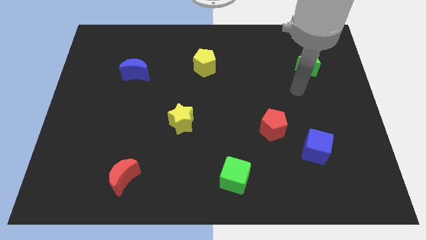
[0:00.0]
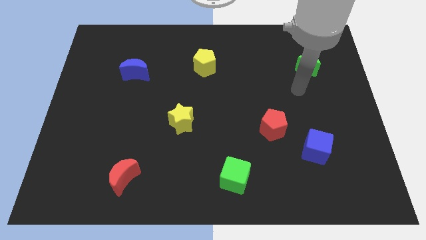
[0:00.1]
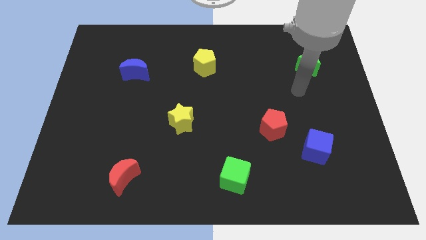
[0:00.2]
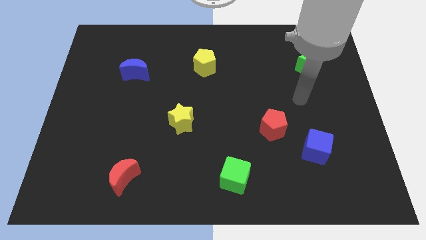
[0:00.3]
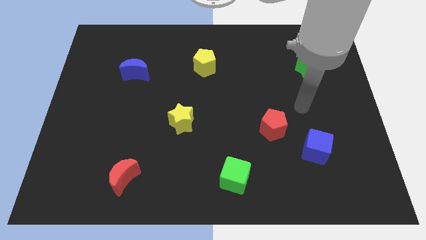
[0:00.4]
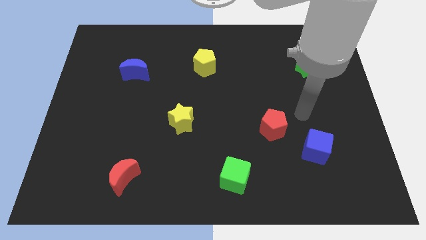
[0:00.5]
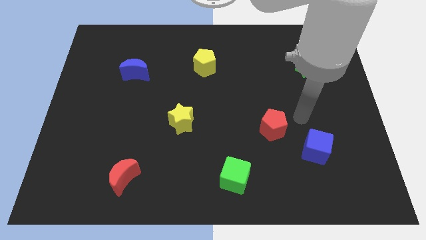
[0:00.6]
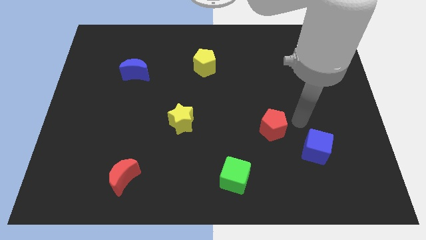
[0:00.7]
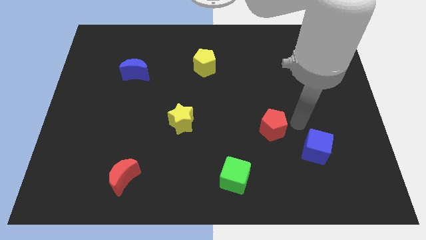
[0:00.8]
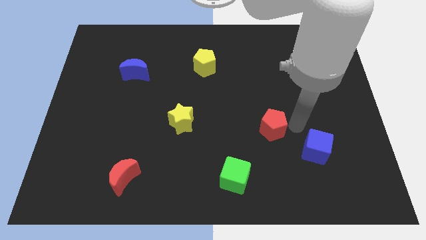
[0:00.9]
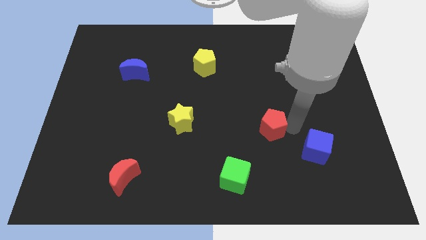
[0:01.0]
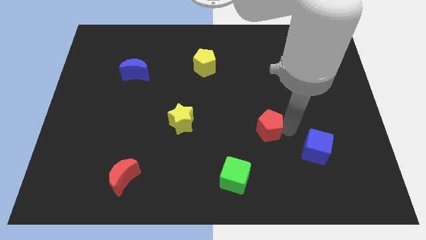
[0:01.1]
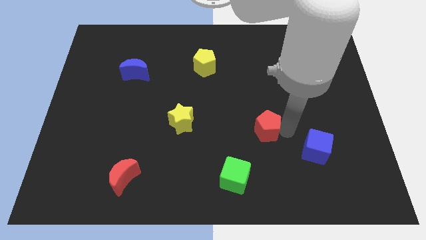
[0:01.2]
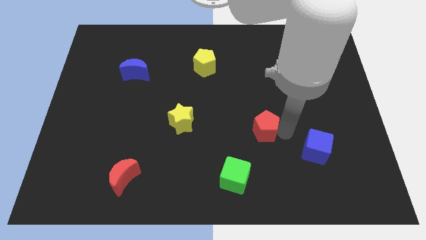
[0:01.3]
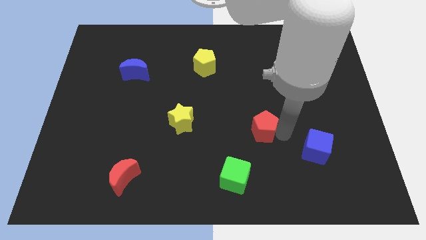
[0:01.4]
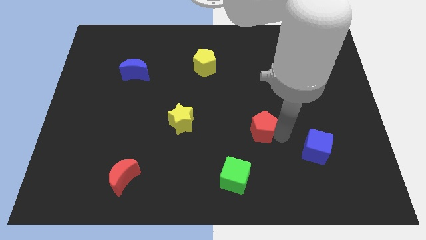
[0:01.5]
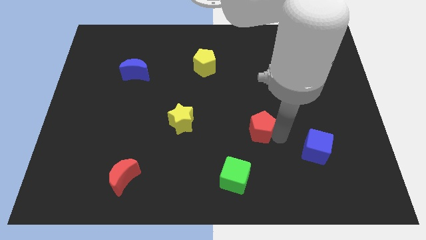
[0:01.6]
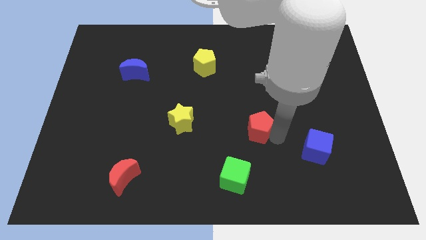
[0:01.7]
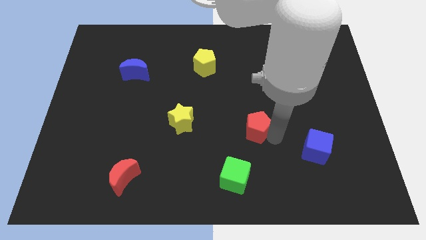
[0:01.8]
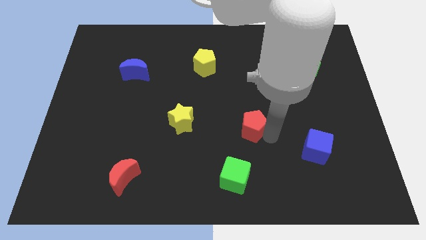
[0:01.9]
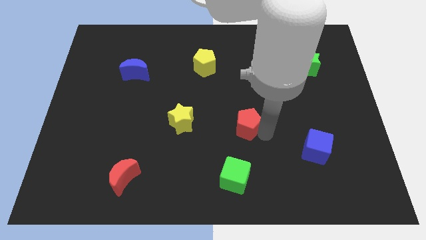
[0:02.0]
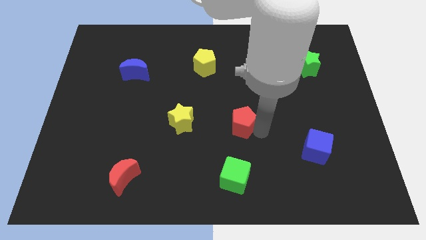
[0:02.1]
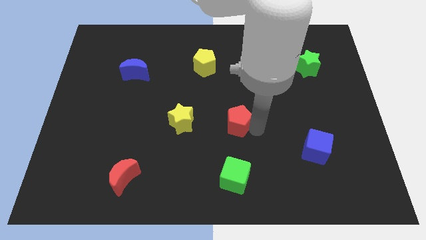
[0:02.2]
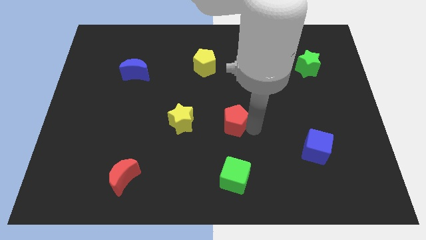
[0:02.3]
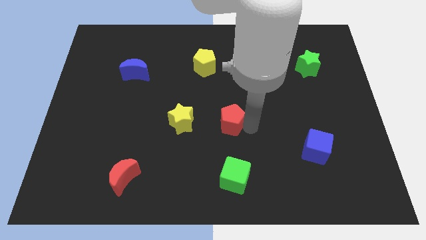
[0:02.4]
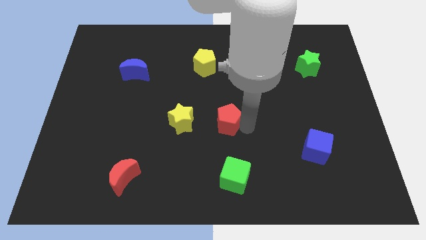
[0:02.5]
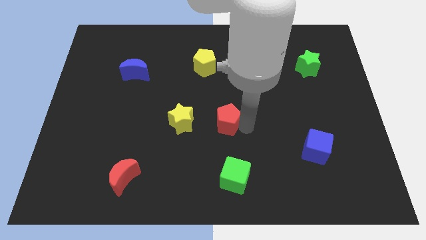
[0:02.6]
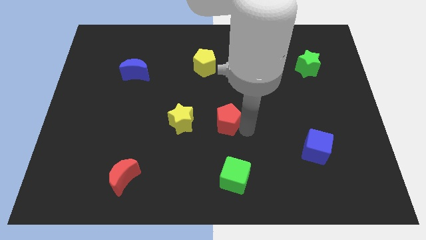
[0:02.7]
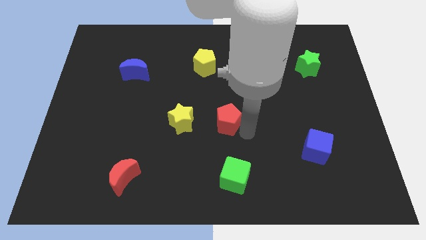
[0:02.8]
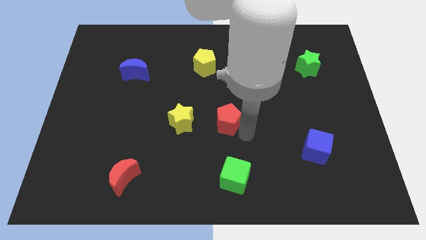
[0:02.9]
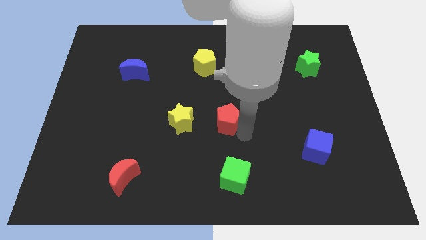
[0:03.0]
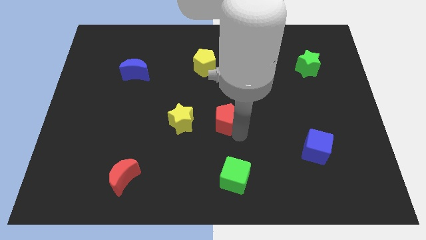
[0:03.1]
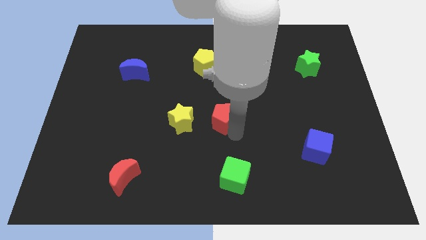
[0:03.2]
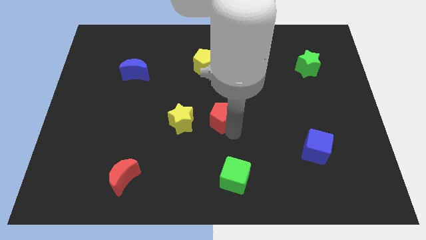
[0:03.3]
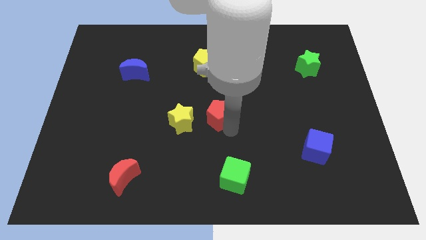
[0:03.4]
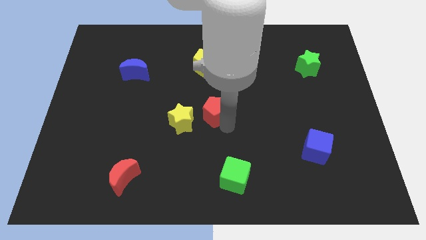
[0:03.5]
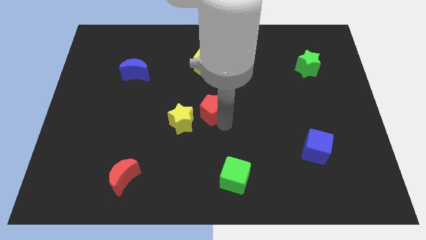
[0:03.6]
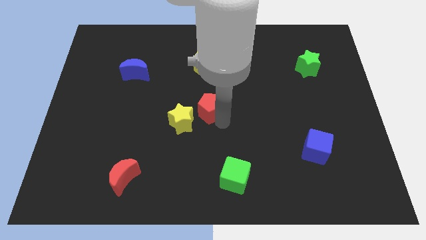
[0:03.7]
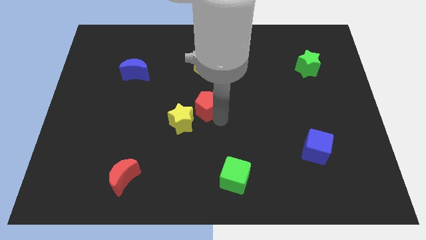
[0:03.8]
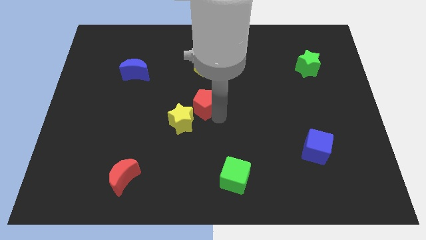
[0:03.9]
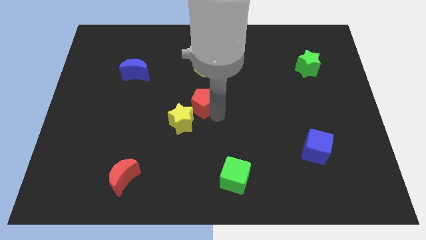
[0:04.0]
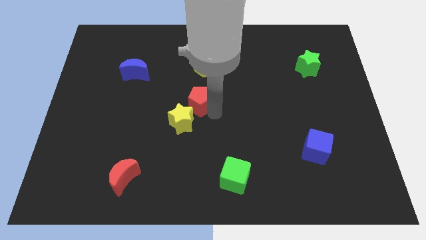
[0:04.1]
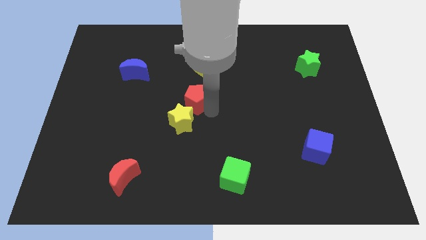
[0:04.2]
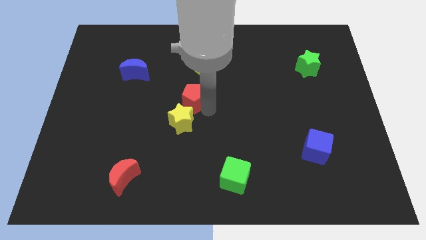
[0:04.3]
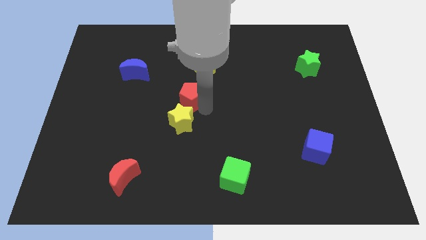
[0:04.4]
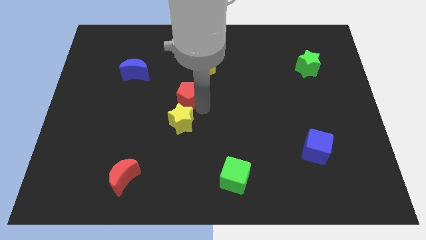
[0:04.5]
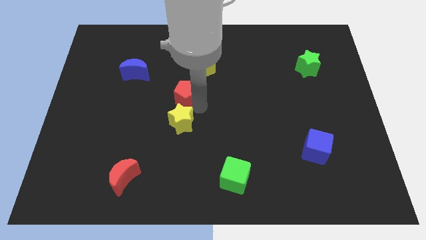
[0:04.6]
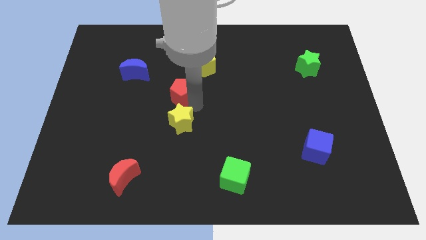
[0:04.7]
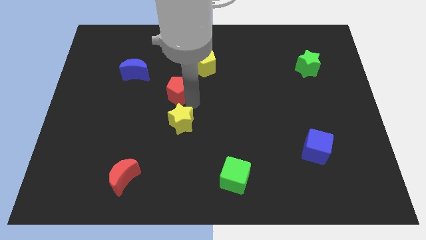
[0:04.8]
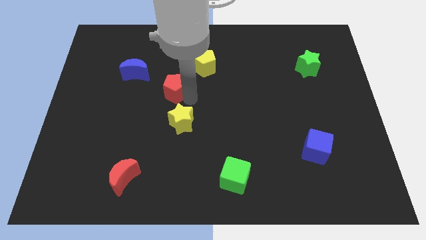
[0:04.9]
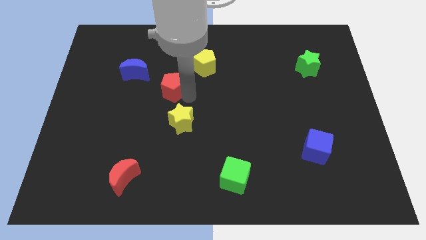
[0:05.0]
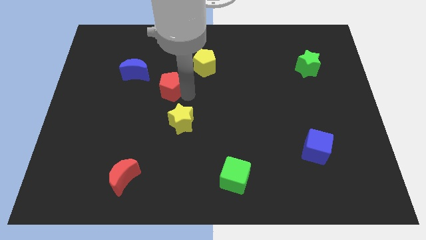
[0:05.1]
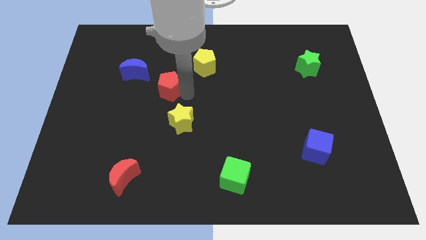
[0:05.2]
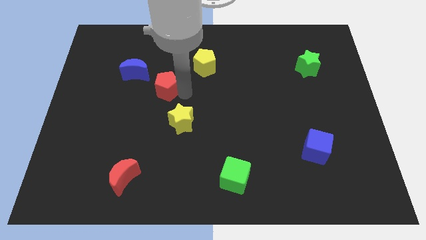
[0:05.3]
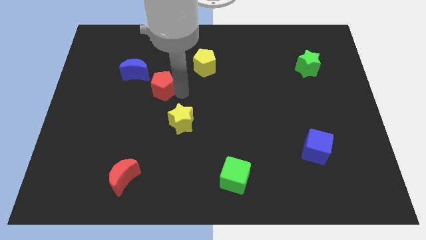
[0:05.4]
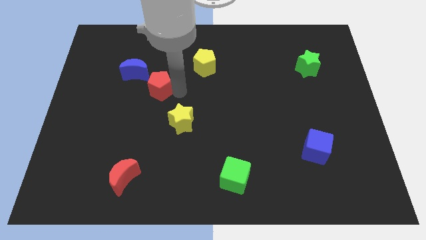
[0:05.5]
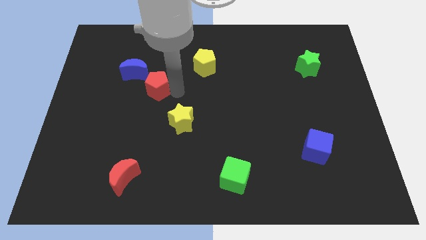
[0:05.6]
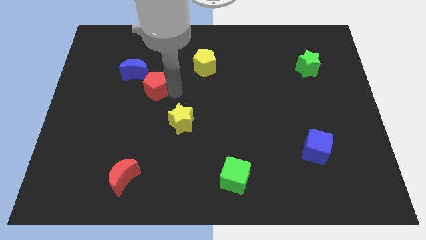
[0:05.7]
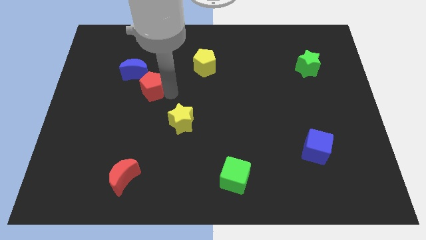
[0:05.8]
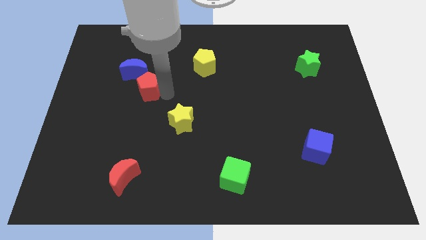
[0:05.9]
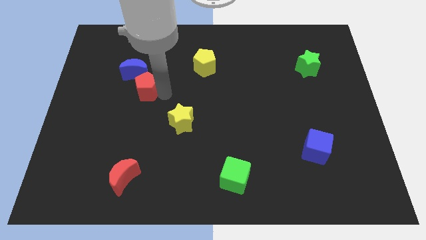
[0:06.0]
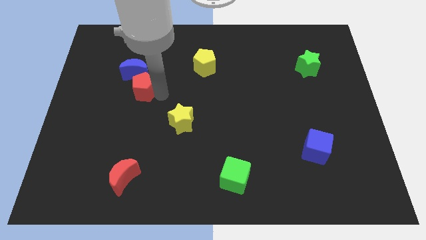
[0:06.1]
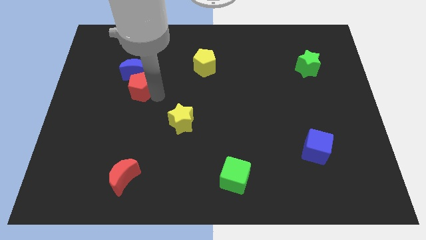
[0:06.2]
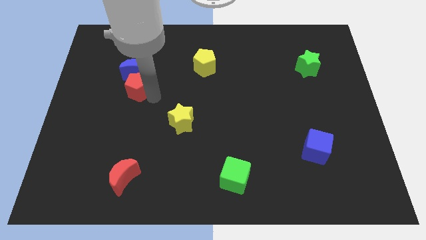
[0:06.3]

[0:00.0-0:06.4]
push the red pentagon towards the blue moon

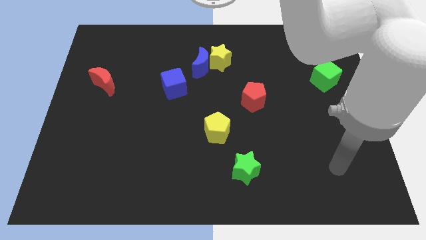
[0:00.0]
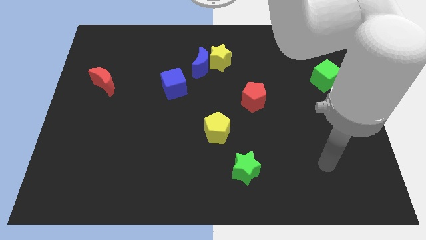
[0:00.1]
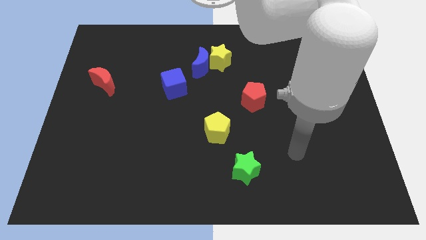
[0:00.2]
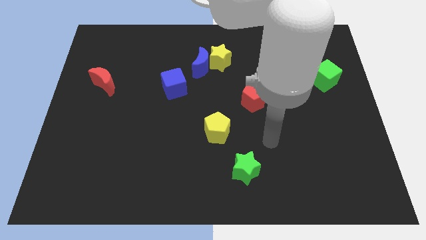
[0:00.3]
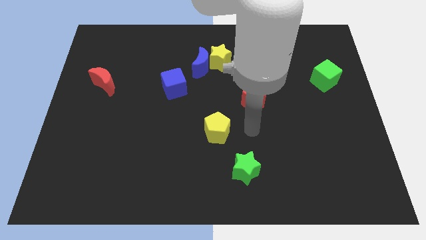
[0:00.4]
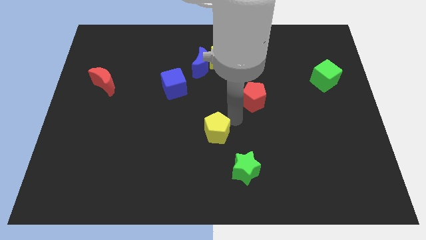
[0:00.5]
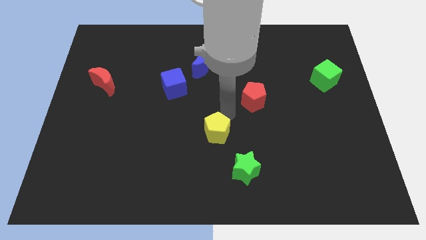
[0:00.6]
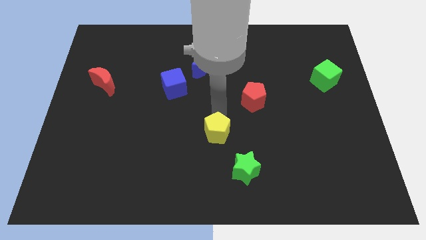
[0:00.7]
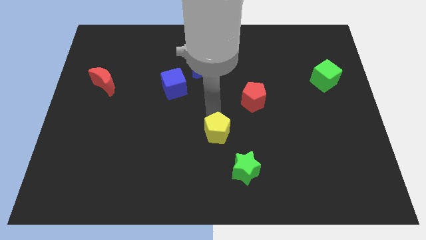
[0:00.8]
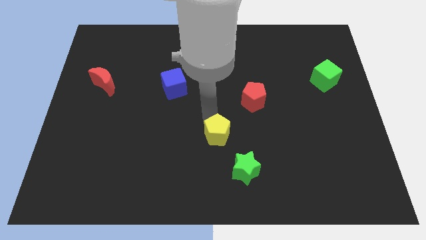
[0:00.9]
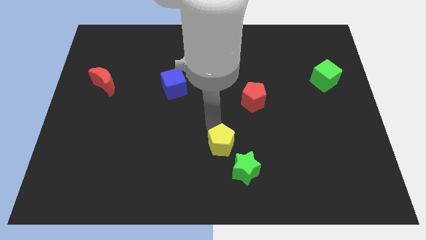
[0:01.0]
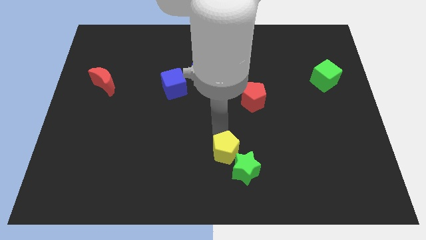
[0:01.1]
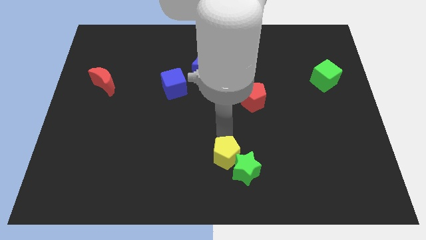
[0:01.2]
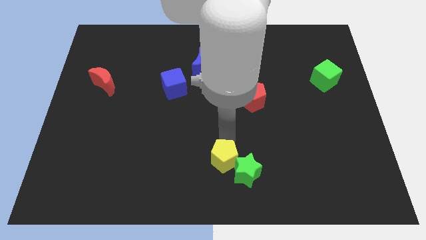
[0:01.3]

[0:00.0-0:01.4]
push the yellow pentagon to the green star

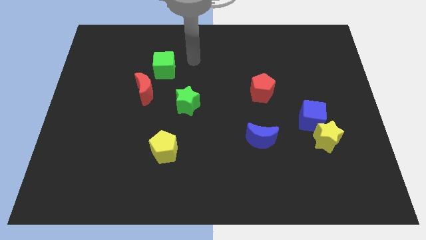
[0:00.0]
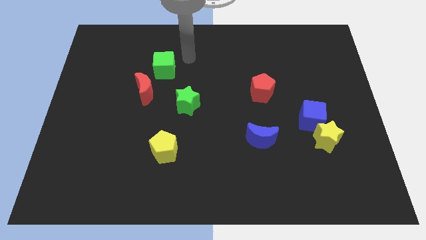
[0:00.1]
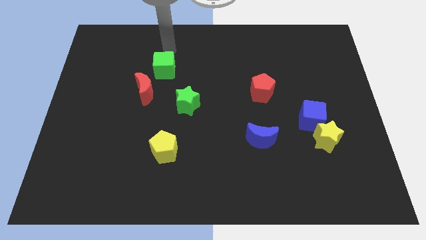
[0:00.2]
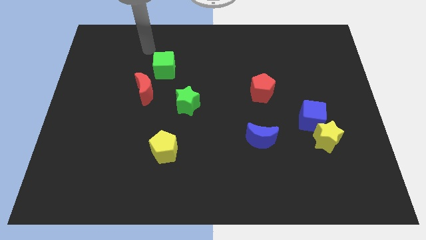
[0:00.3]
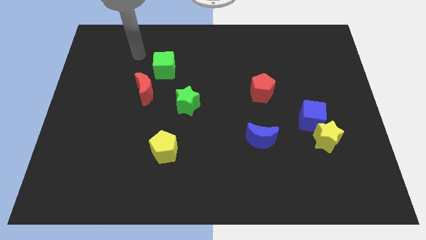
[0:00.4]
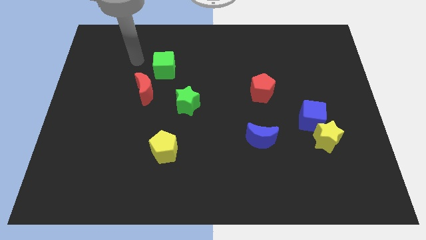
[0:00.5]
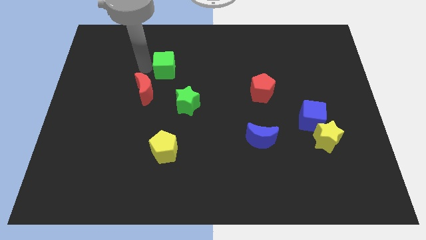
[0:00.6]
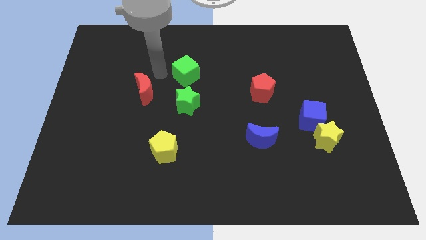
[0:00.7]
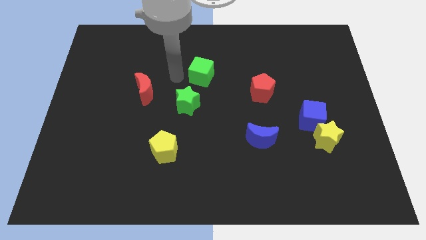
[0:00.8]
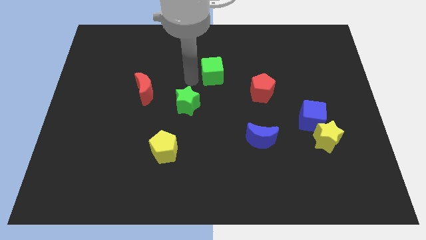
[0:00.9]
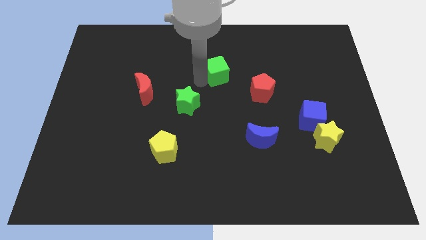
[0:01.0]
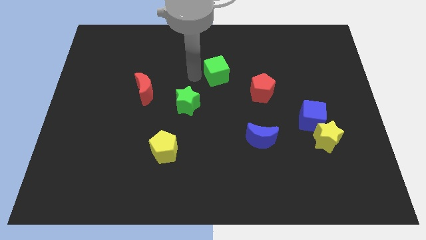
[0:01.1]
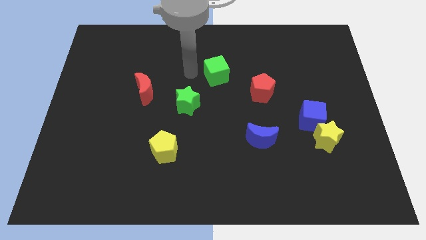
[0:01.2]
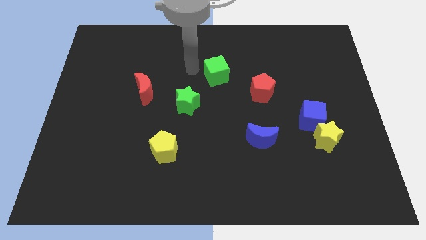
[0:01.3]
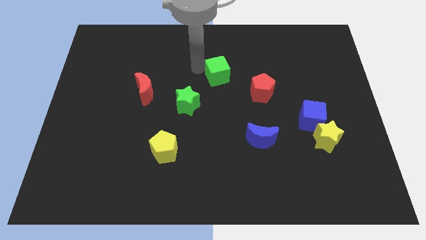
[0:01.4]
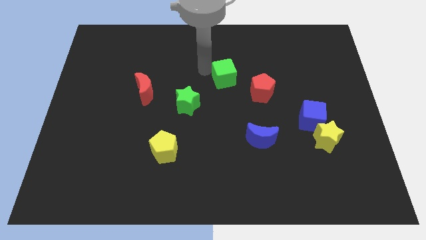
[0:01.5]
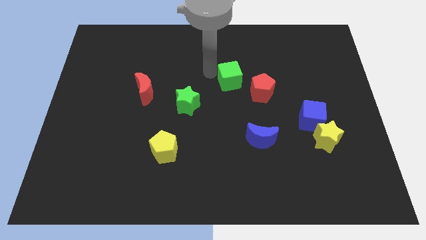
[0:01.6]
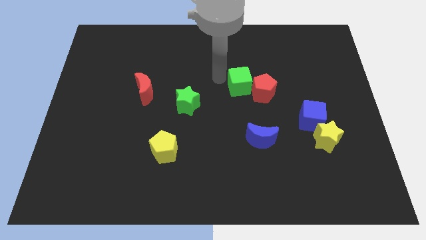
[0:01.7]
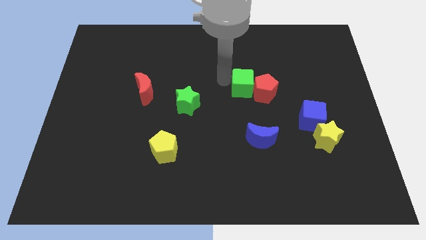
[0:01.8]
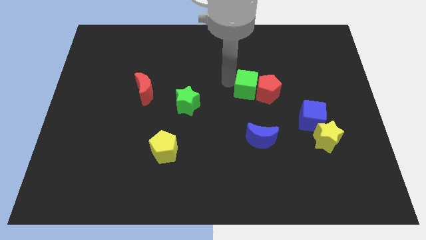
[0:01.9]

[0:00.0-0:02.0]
move the green cube next to the red pentagon
